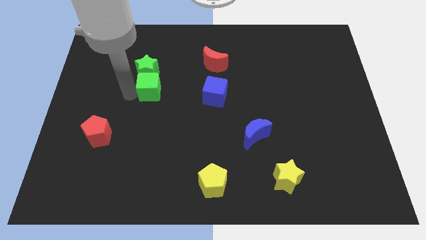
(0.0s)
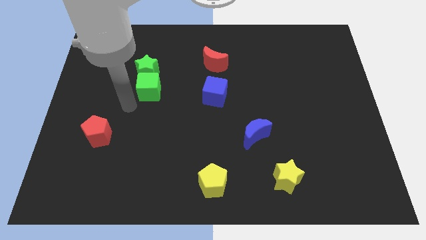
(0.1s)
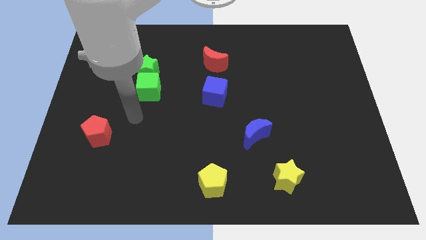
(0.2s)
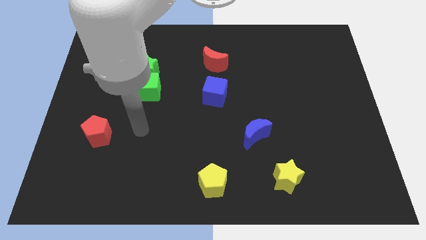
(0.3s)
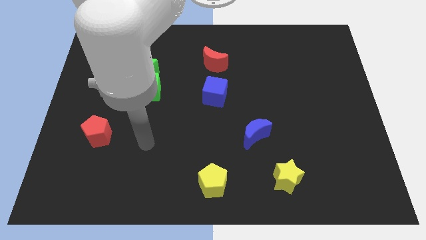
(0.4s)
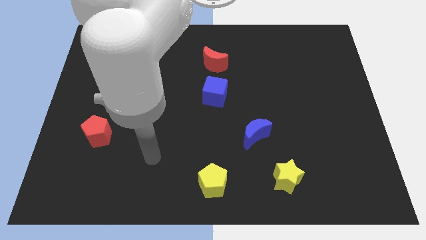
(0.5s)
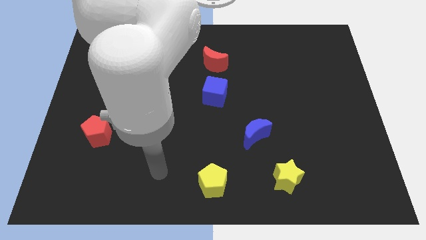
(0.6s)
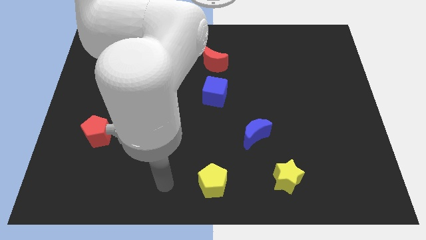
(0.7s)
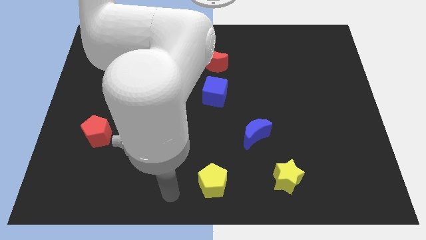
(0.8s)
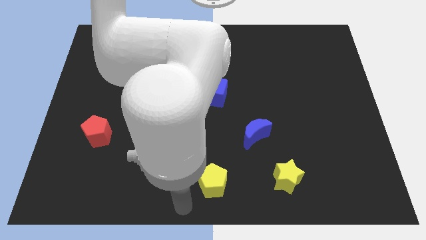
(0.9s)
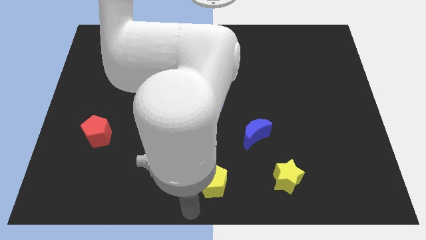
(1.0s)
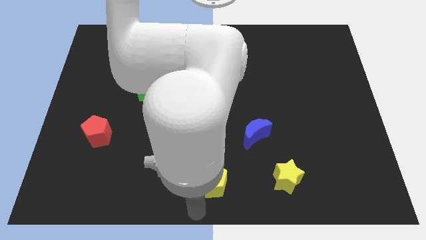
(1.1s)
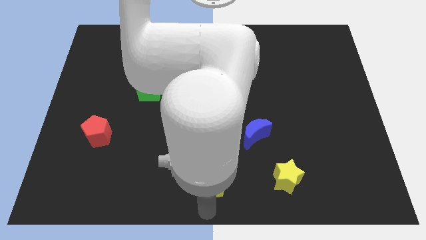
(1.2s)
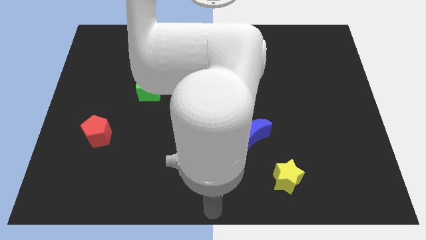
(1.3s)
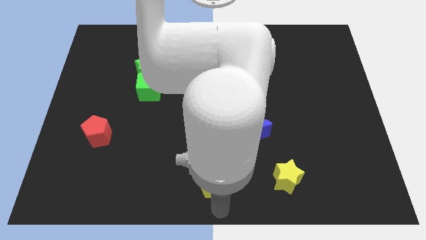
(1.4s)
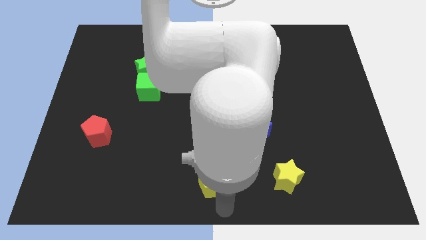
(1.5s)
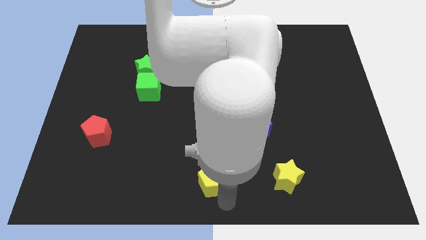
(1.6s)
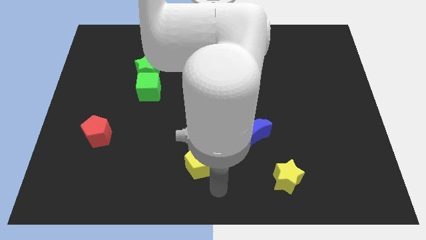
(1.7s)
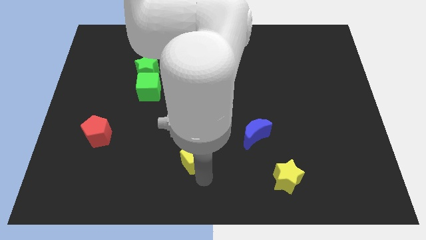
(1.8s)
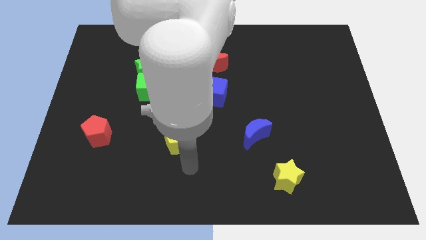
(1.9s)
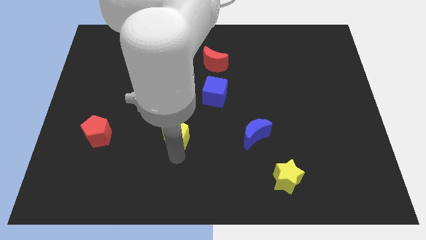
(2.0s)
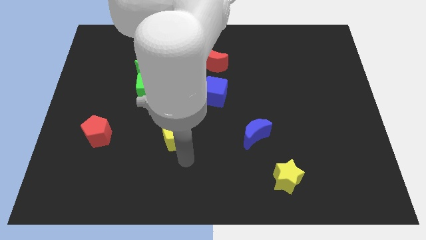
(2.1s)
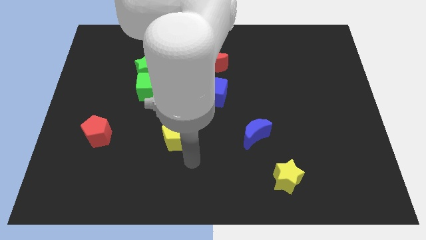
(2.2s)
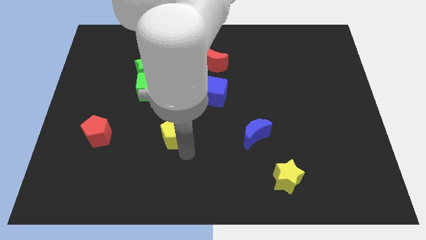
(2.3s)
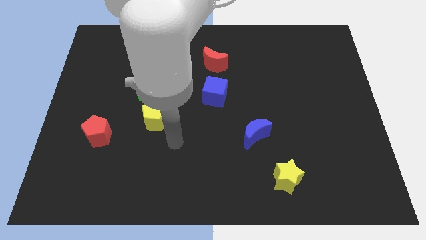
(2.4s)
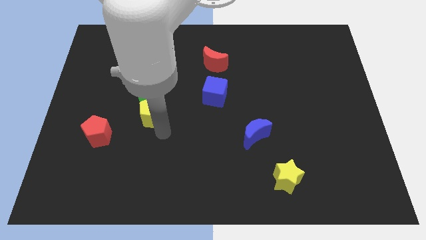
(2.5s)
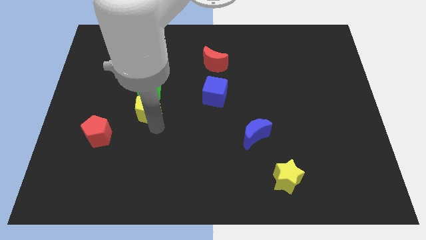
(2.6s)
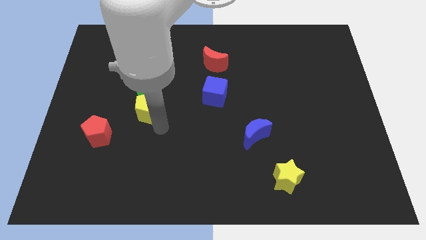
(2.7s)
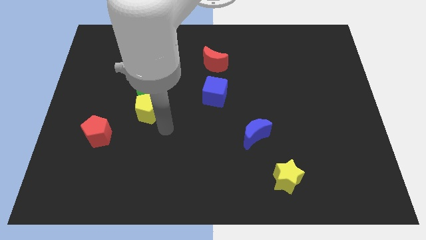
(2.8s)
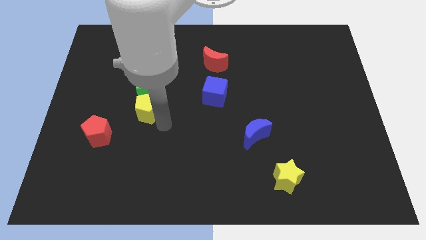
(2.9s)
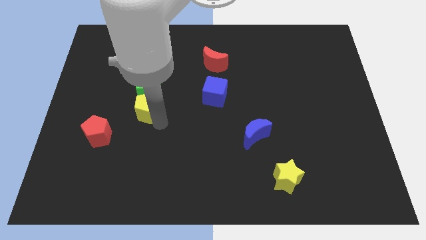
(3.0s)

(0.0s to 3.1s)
push the yellow pentagon close to the green cube

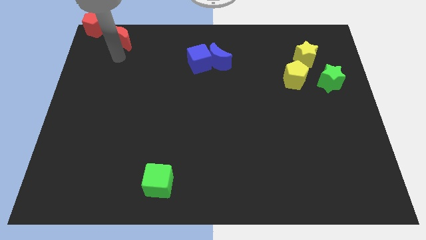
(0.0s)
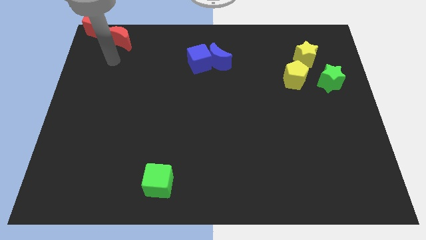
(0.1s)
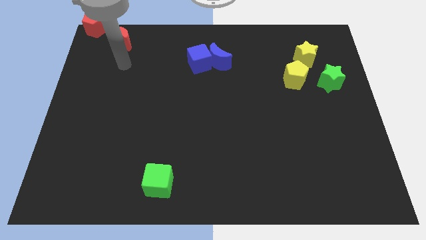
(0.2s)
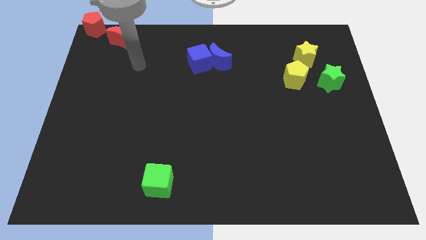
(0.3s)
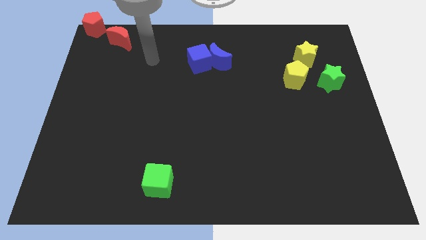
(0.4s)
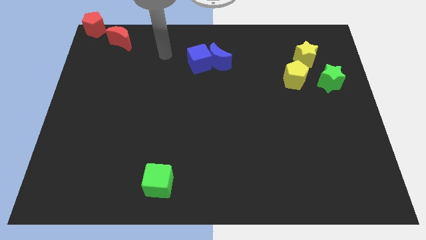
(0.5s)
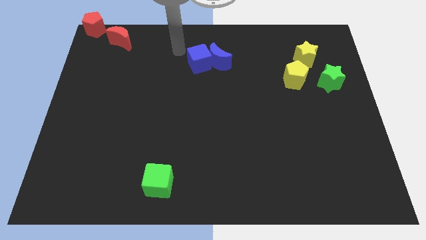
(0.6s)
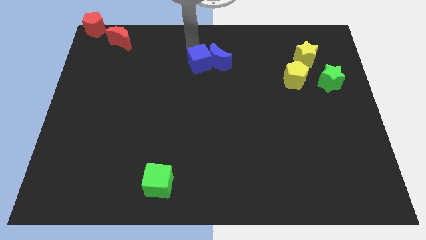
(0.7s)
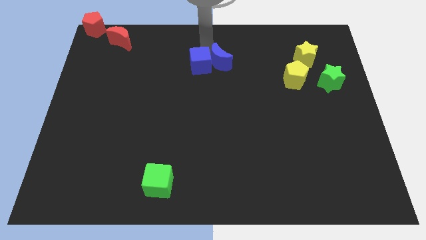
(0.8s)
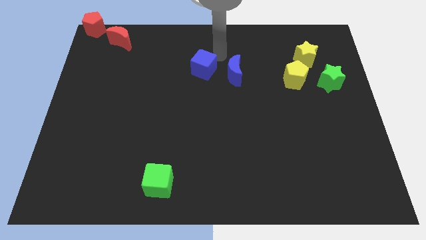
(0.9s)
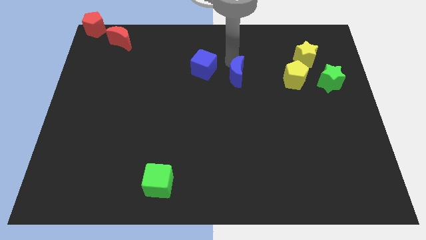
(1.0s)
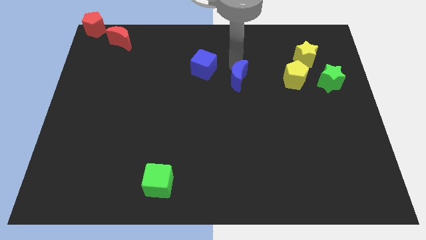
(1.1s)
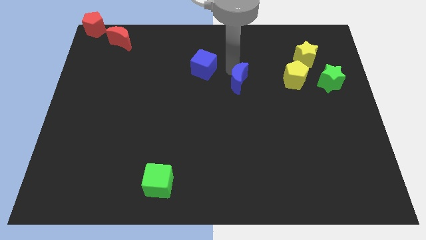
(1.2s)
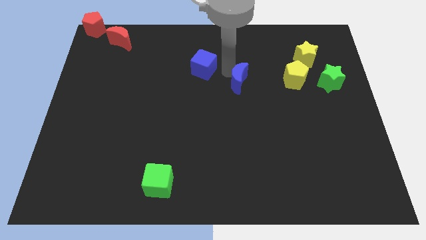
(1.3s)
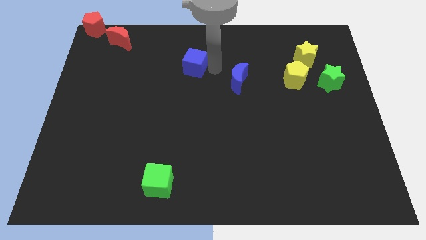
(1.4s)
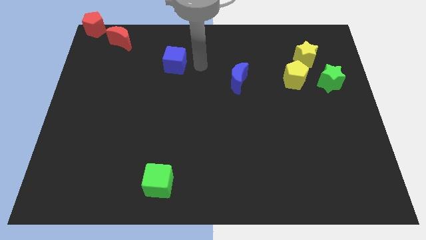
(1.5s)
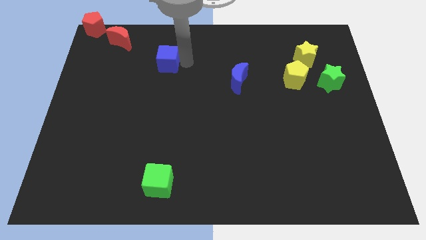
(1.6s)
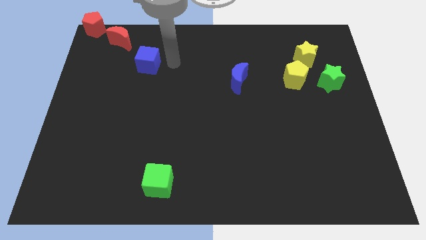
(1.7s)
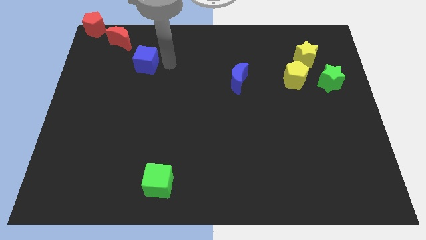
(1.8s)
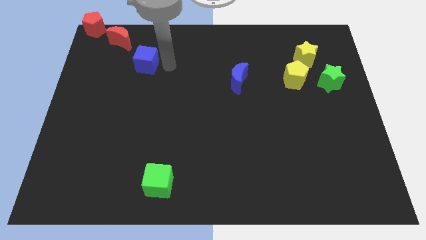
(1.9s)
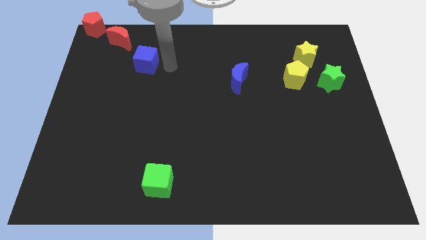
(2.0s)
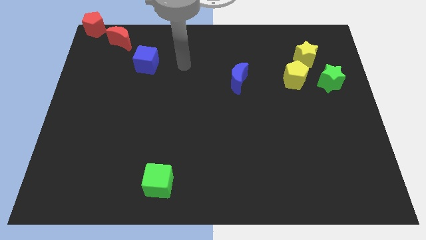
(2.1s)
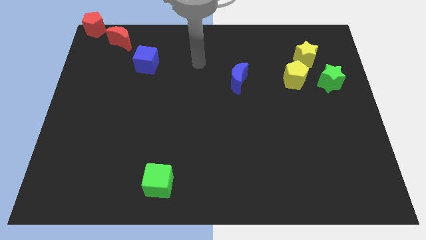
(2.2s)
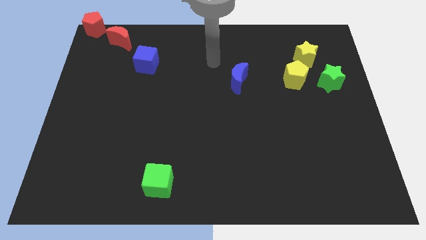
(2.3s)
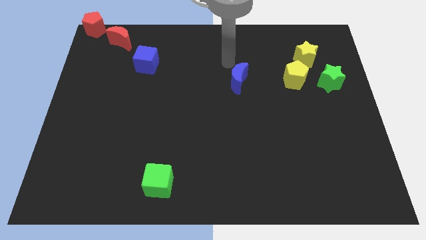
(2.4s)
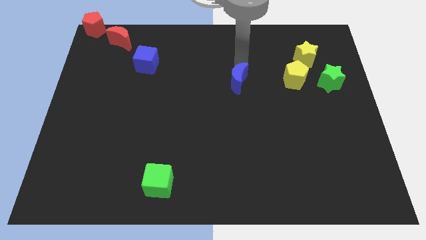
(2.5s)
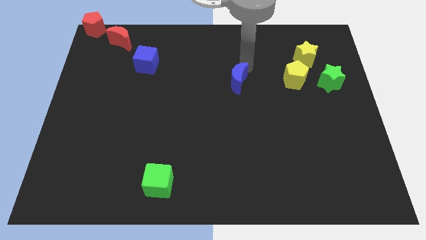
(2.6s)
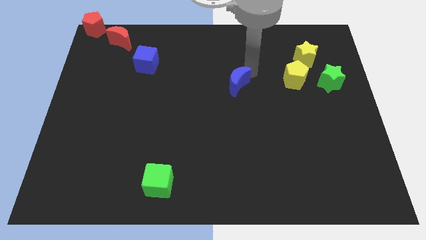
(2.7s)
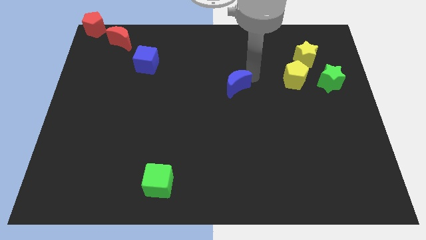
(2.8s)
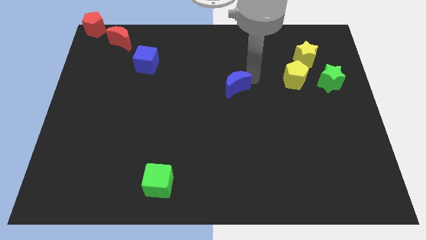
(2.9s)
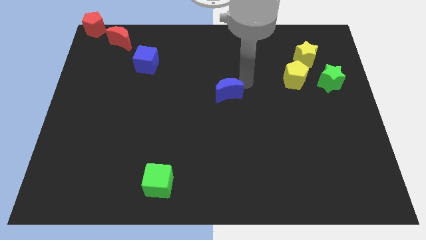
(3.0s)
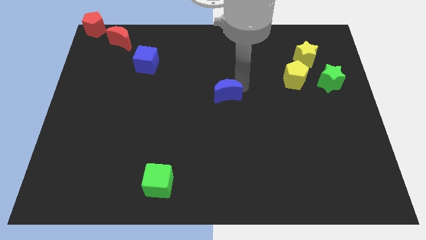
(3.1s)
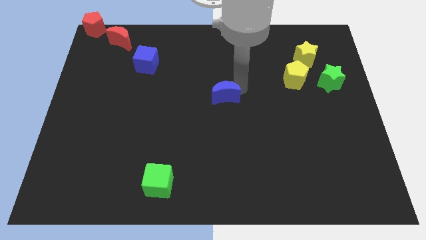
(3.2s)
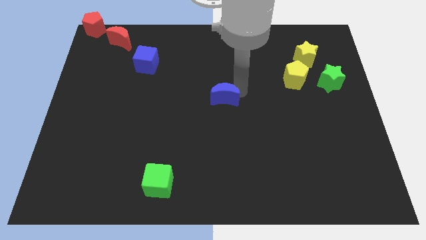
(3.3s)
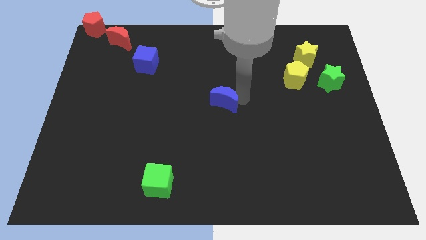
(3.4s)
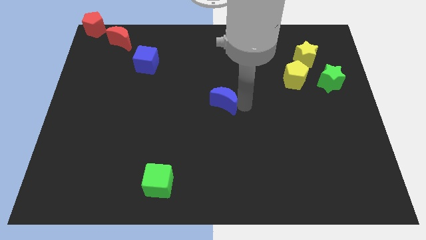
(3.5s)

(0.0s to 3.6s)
separate the blue cube from the blue moon

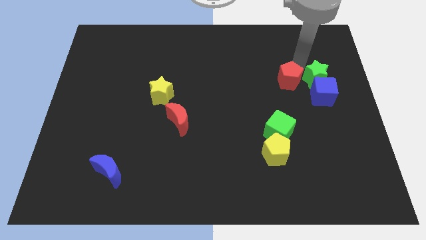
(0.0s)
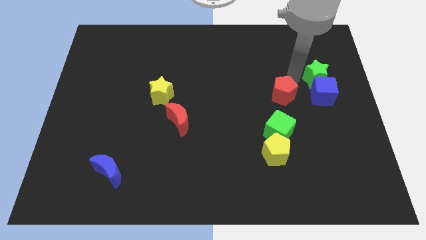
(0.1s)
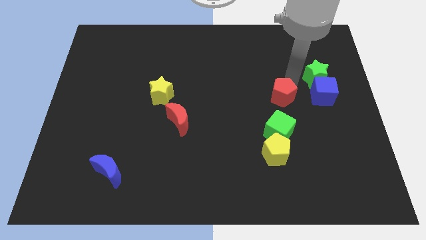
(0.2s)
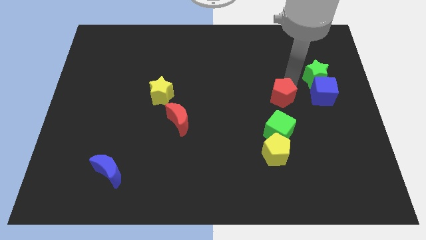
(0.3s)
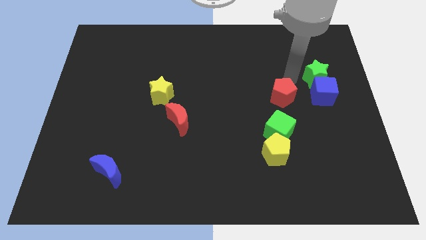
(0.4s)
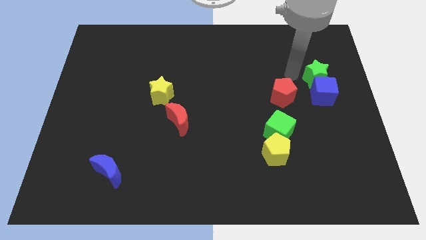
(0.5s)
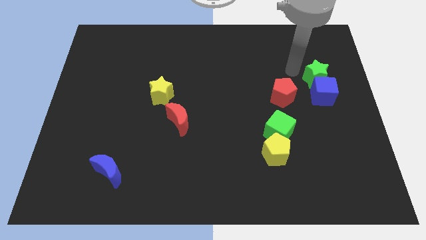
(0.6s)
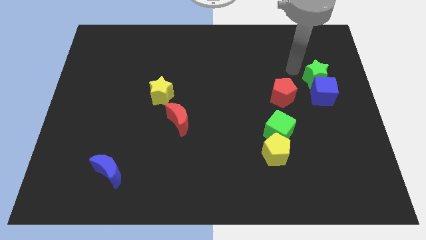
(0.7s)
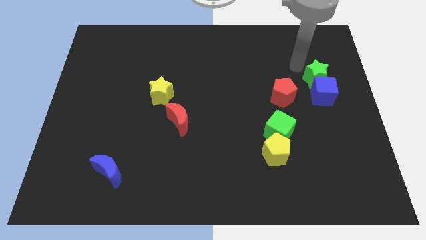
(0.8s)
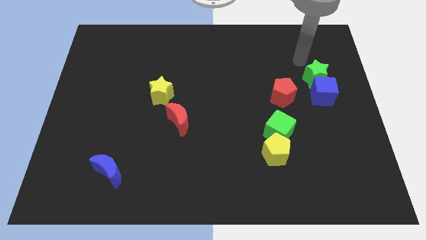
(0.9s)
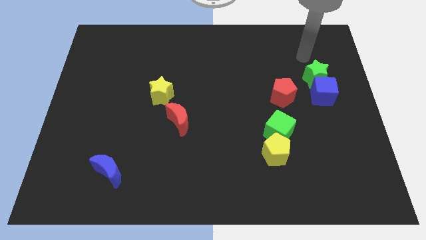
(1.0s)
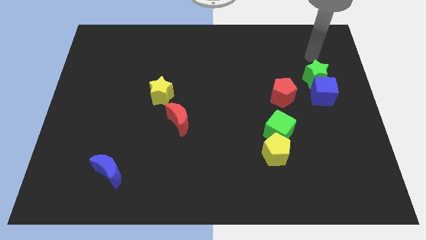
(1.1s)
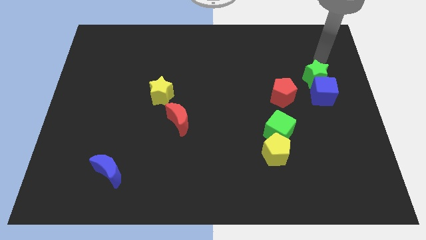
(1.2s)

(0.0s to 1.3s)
slightly push the red pentagon downwards

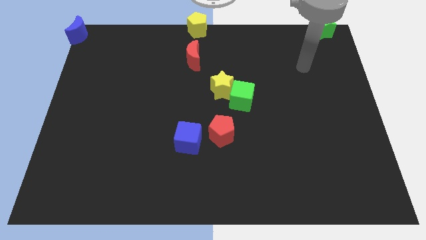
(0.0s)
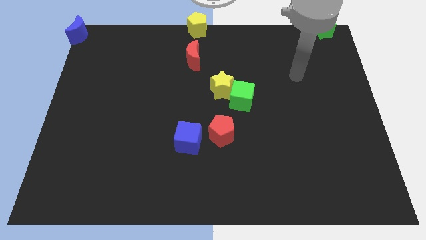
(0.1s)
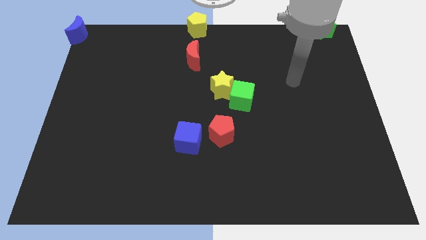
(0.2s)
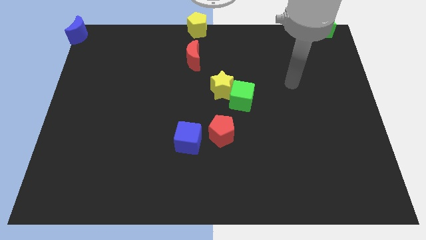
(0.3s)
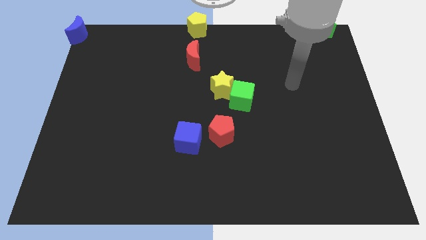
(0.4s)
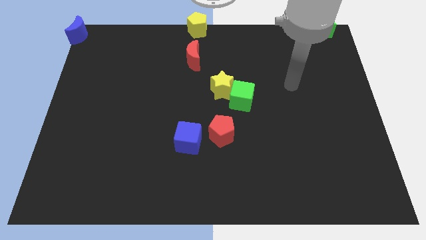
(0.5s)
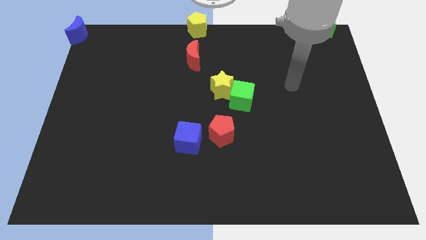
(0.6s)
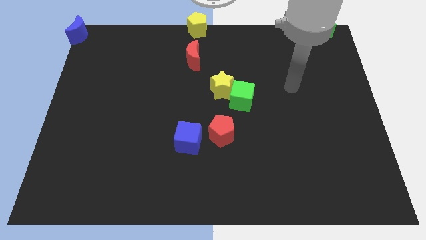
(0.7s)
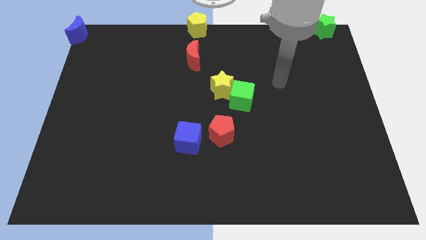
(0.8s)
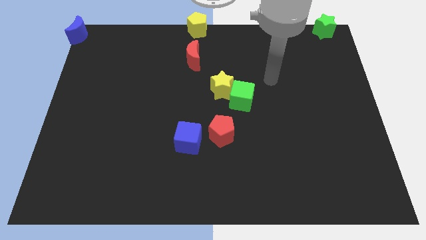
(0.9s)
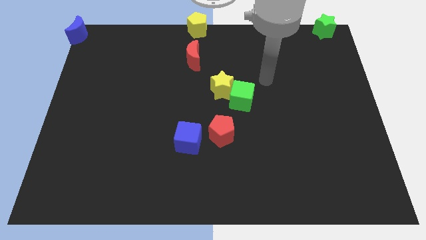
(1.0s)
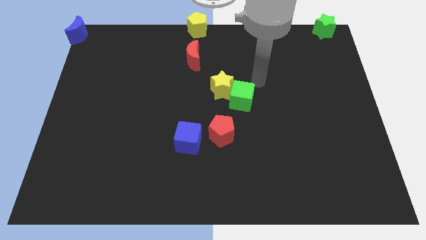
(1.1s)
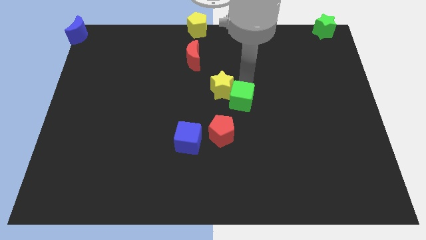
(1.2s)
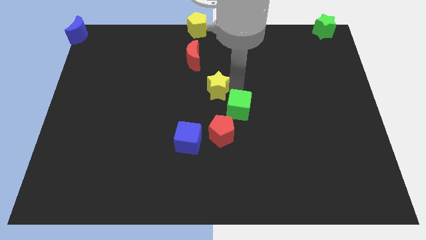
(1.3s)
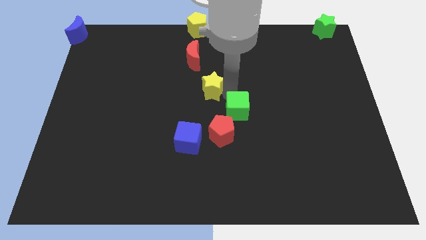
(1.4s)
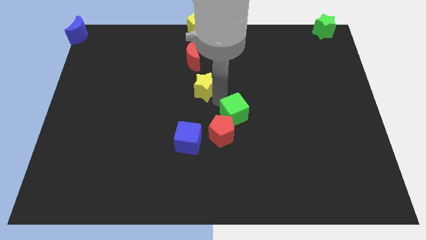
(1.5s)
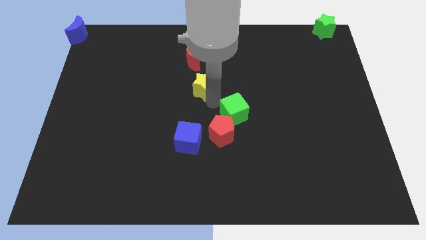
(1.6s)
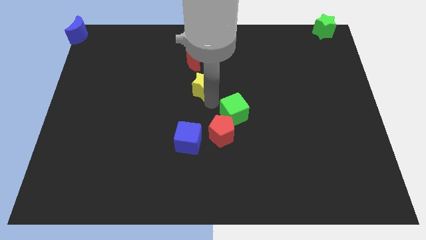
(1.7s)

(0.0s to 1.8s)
go and separate the yellow star and the green cube
